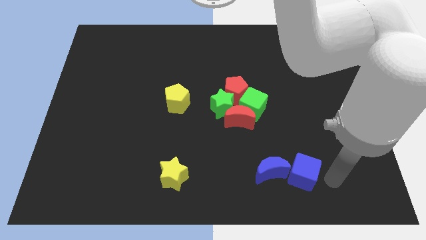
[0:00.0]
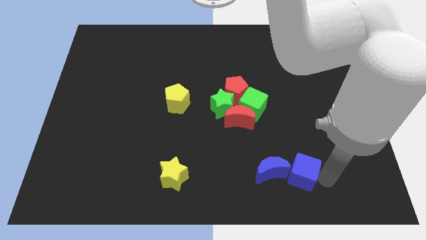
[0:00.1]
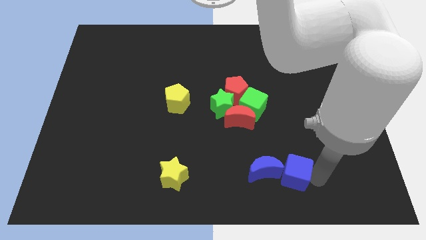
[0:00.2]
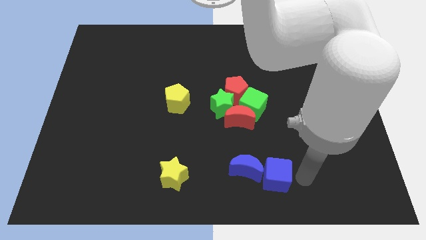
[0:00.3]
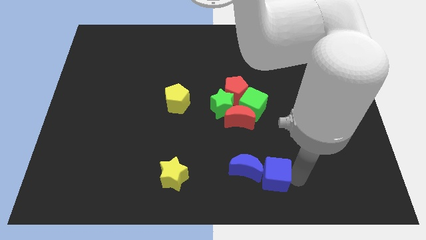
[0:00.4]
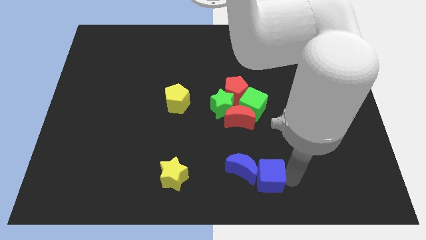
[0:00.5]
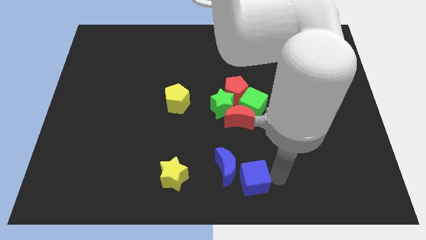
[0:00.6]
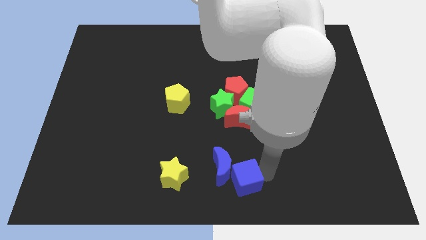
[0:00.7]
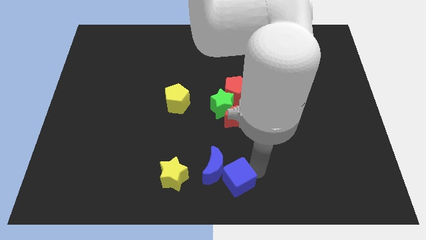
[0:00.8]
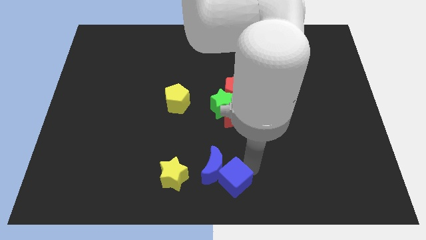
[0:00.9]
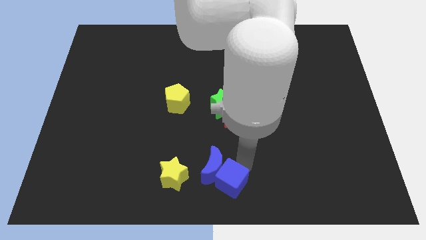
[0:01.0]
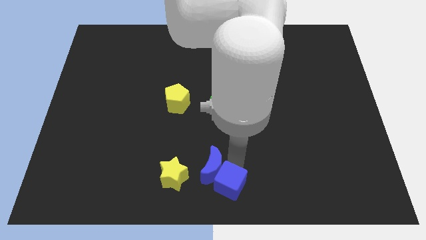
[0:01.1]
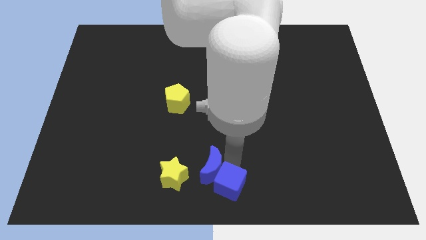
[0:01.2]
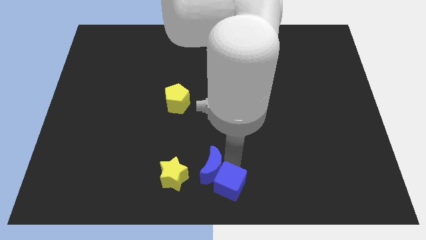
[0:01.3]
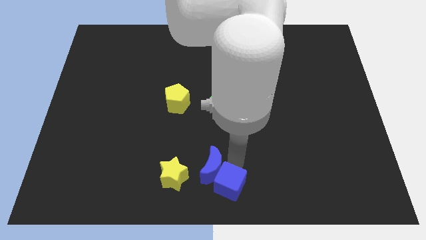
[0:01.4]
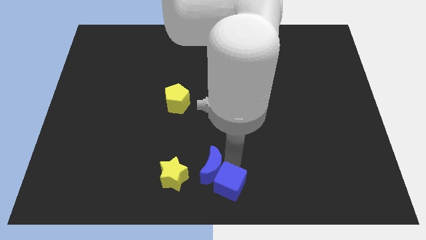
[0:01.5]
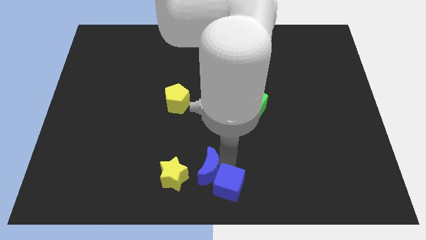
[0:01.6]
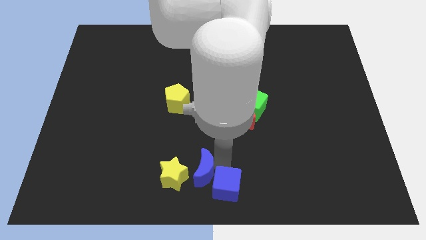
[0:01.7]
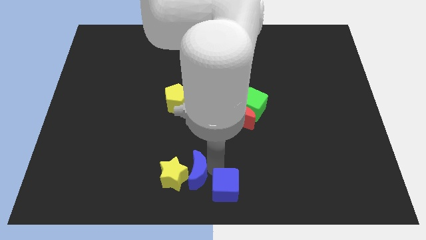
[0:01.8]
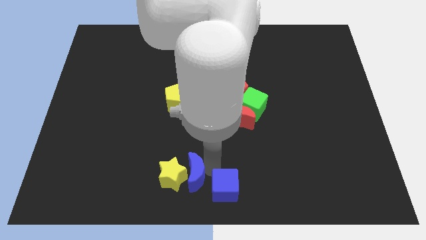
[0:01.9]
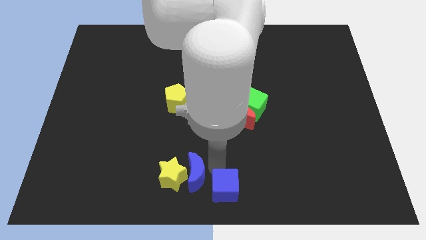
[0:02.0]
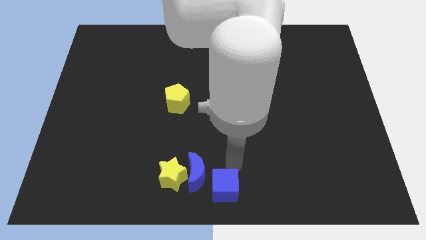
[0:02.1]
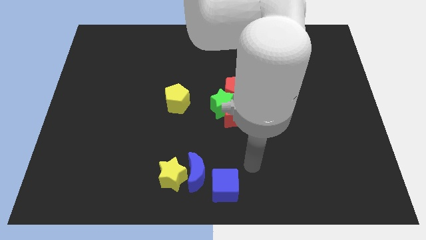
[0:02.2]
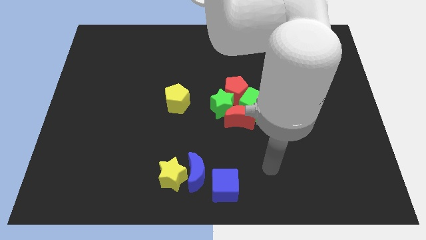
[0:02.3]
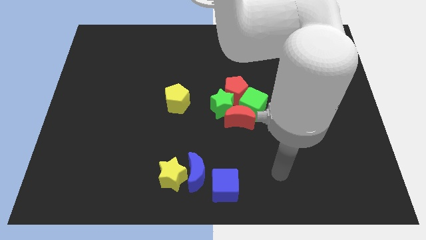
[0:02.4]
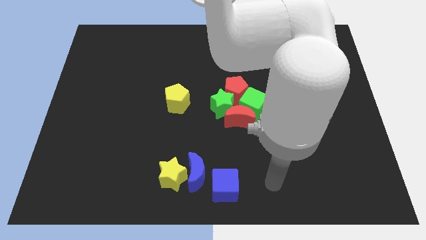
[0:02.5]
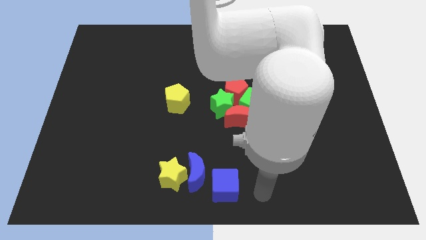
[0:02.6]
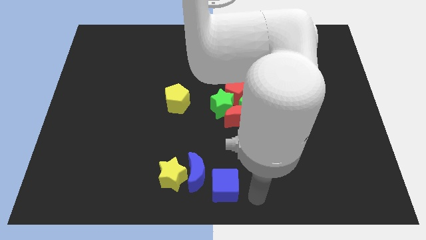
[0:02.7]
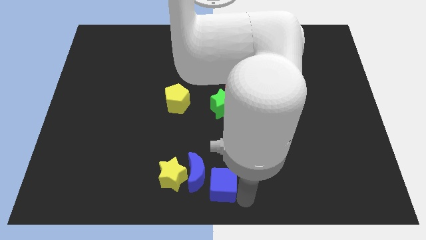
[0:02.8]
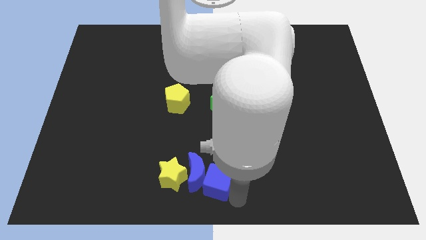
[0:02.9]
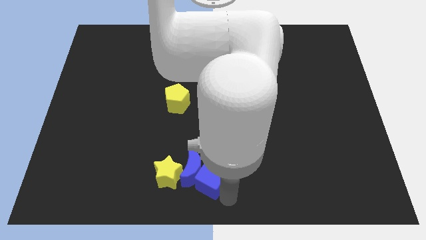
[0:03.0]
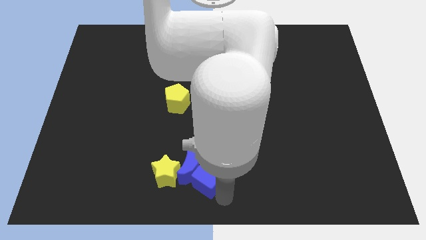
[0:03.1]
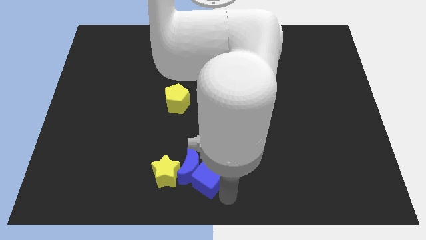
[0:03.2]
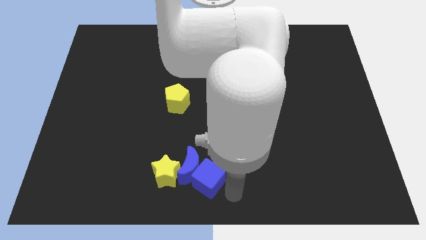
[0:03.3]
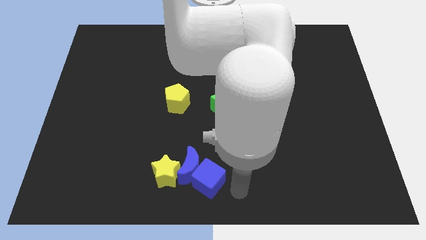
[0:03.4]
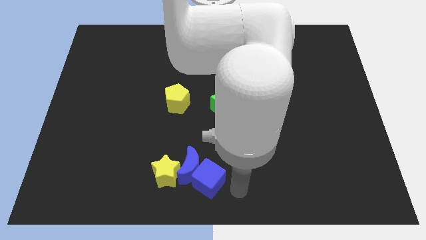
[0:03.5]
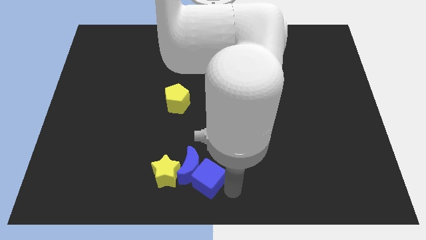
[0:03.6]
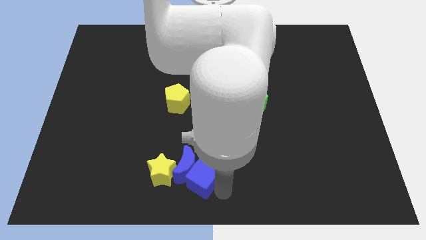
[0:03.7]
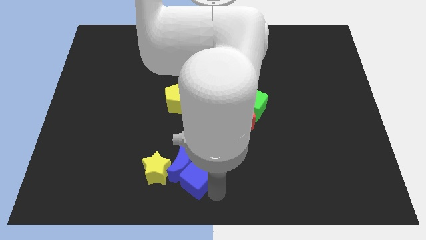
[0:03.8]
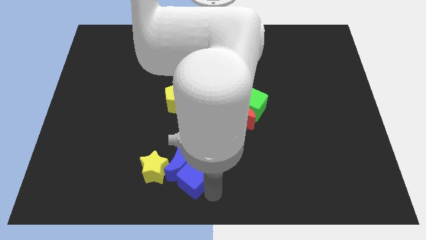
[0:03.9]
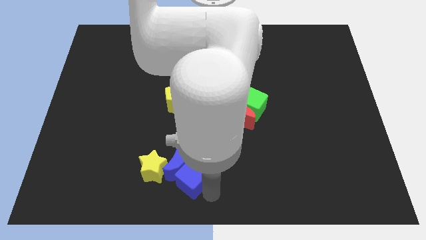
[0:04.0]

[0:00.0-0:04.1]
push the blue cube along with blue crescent into the yellow star

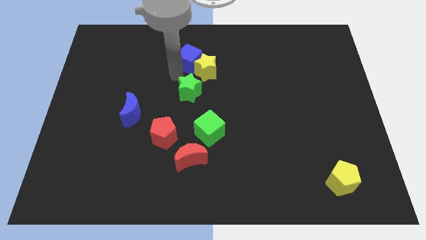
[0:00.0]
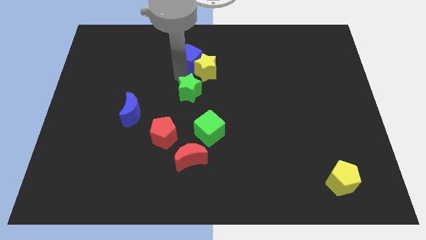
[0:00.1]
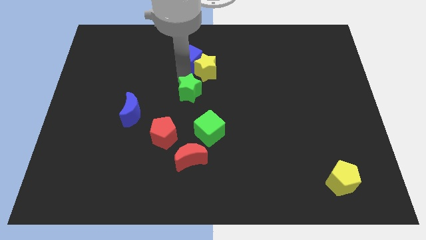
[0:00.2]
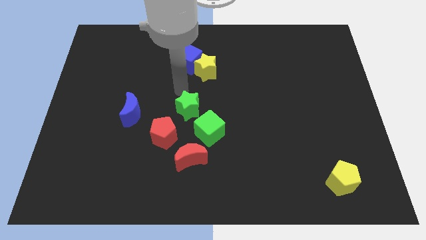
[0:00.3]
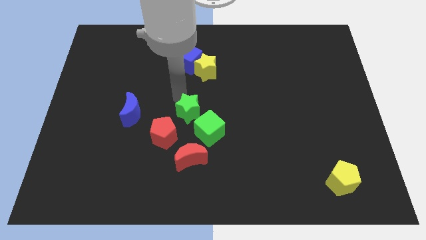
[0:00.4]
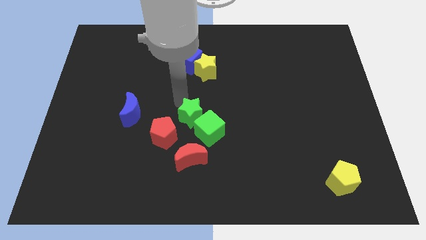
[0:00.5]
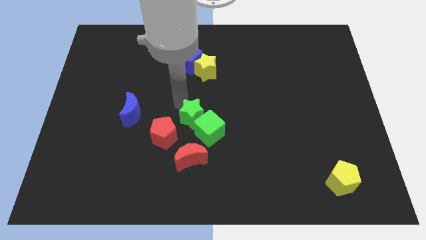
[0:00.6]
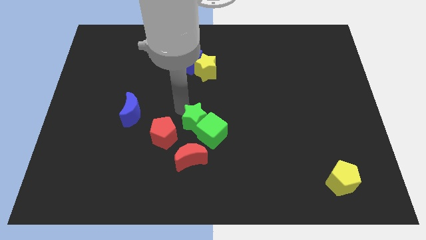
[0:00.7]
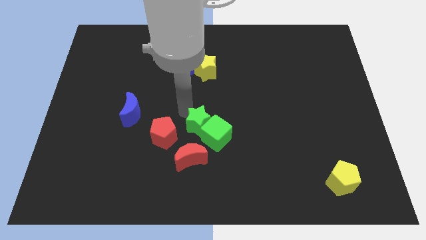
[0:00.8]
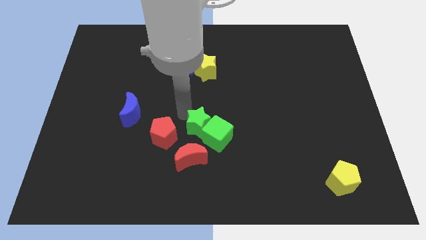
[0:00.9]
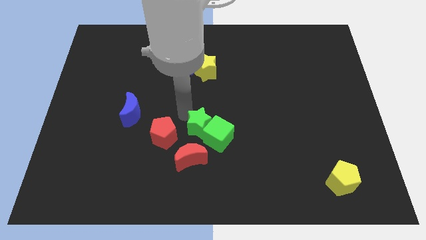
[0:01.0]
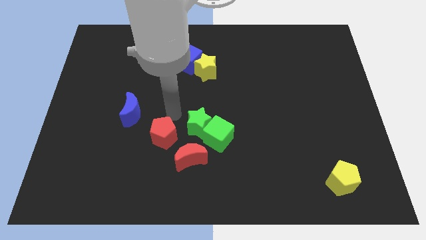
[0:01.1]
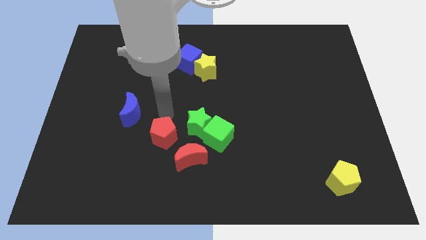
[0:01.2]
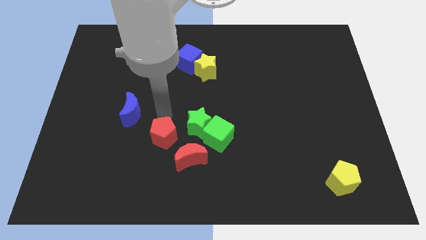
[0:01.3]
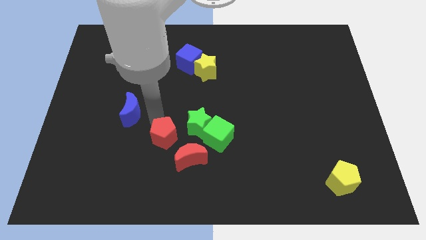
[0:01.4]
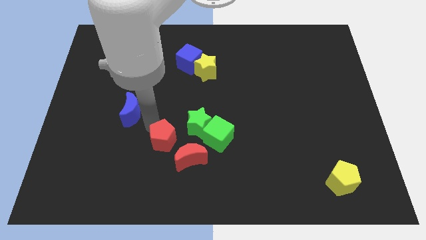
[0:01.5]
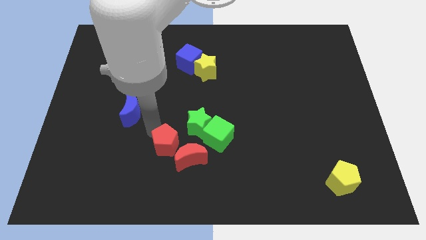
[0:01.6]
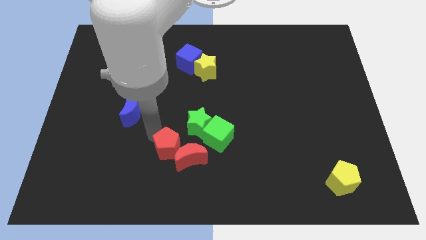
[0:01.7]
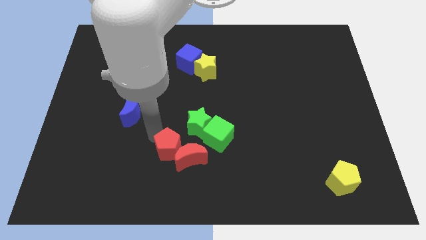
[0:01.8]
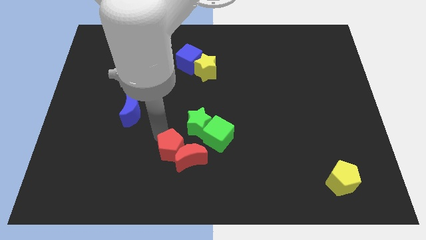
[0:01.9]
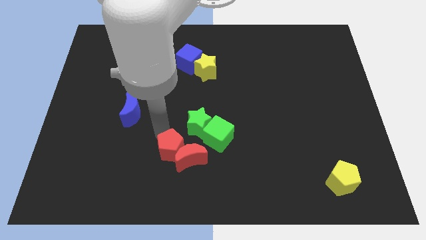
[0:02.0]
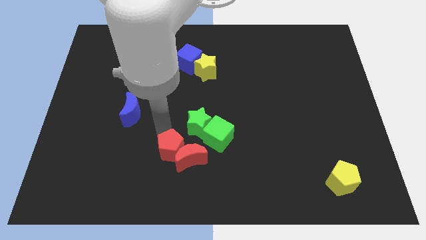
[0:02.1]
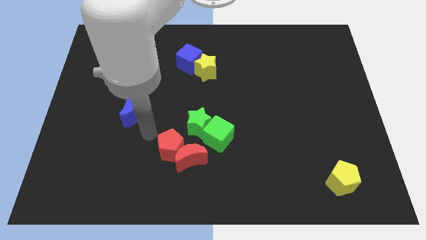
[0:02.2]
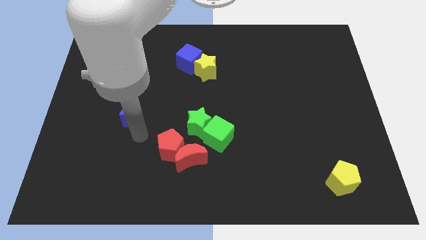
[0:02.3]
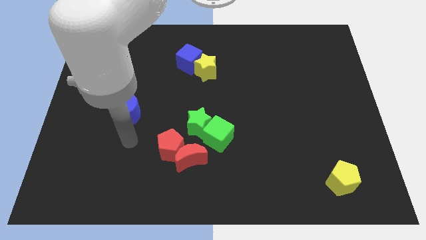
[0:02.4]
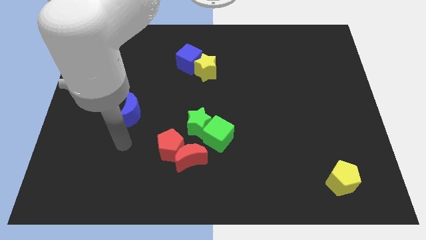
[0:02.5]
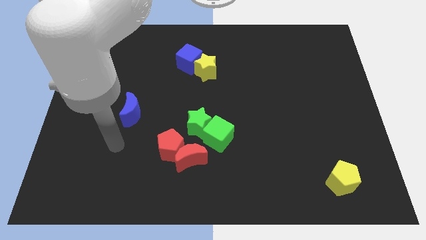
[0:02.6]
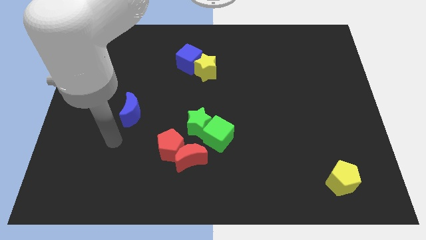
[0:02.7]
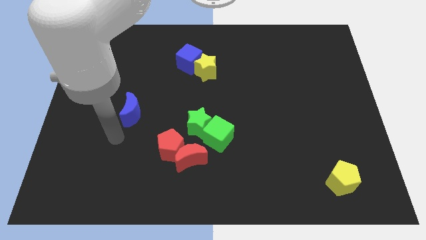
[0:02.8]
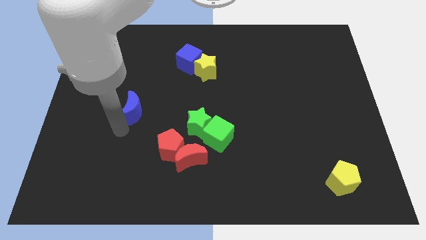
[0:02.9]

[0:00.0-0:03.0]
move arm near blue moon

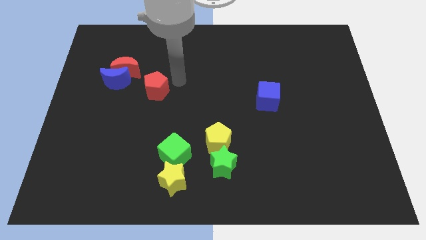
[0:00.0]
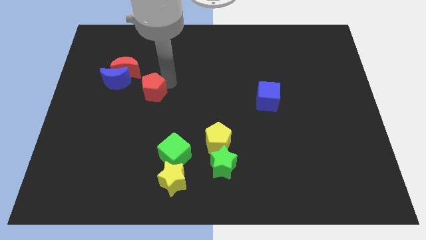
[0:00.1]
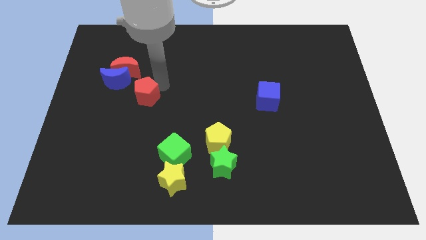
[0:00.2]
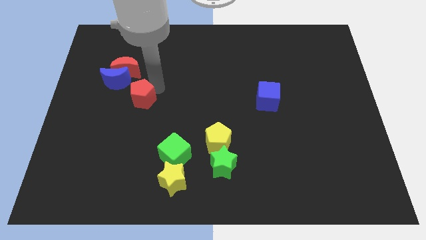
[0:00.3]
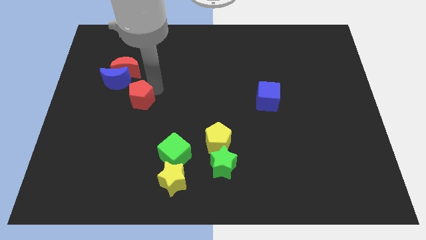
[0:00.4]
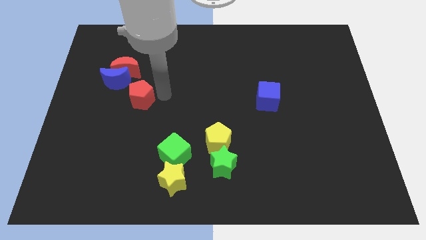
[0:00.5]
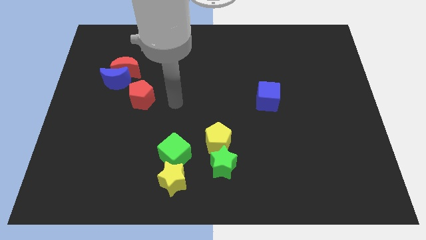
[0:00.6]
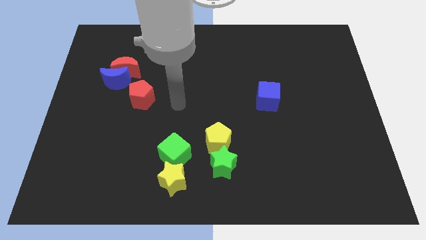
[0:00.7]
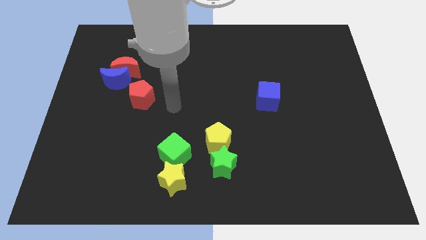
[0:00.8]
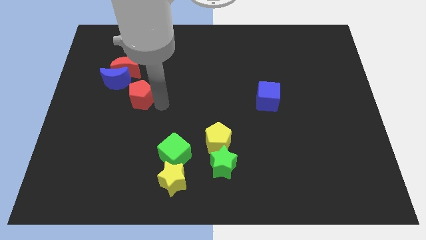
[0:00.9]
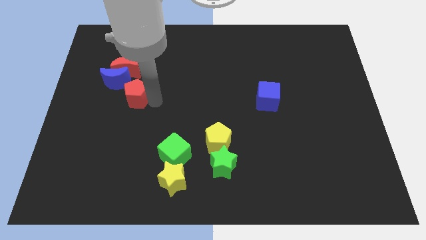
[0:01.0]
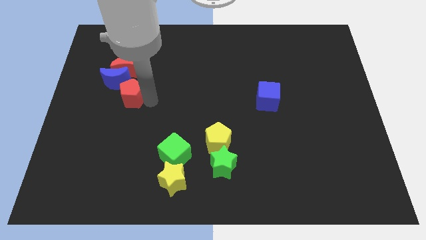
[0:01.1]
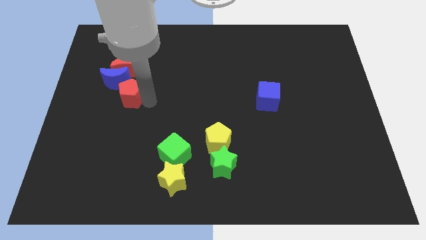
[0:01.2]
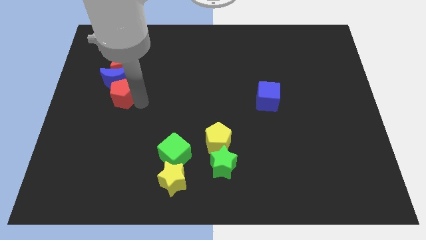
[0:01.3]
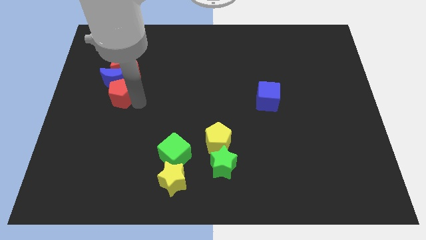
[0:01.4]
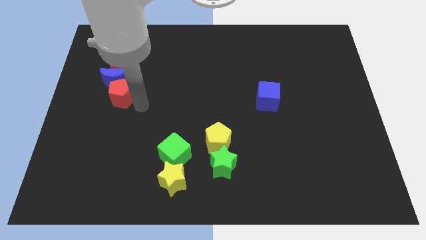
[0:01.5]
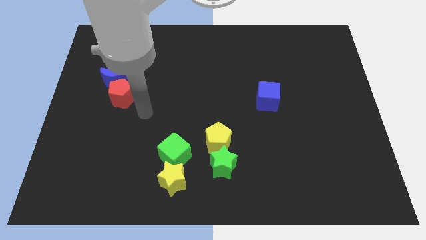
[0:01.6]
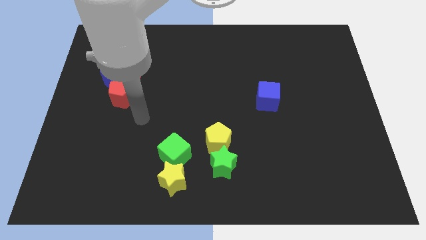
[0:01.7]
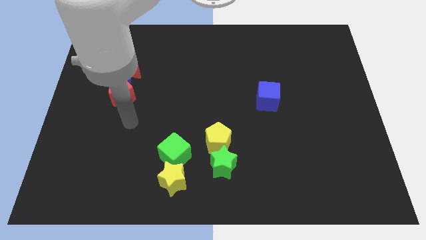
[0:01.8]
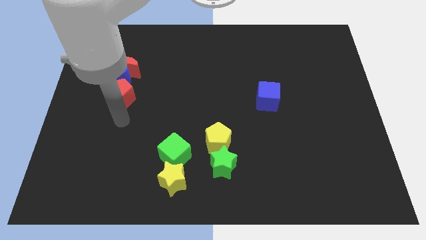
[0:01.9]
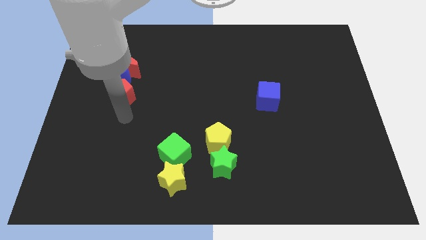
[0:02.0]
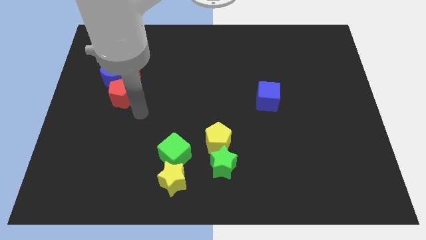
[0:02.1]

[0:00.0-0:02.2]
push the red pentagon to bottom right of blue moon
